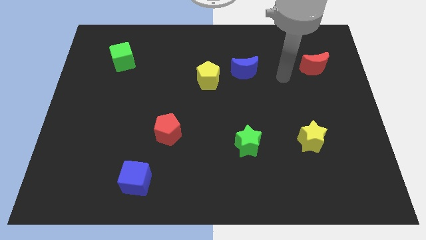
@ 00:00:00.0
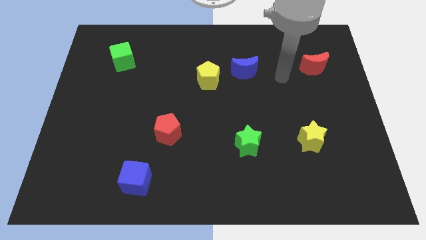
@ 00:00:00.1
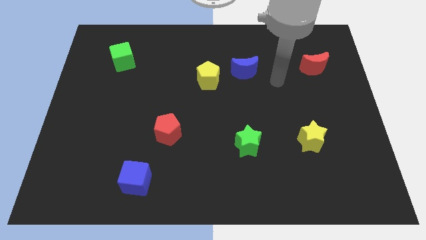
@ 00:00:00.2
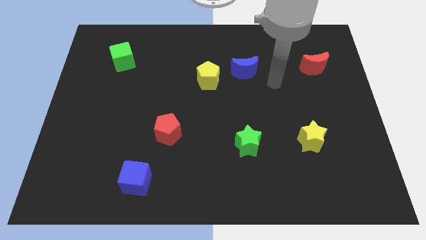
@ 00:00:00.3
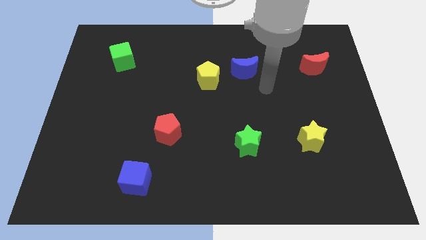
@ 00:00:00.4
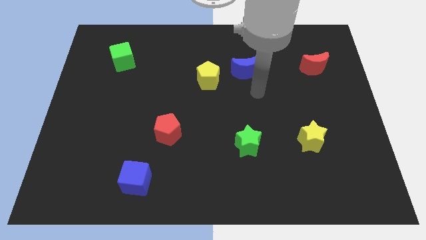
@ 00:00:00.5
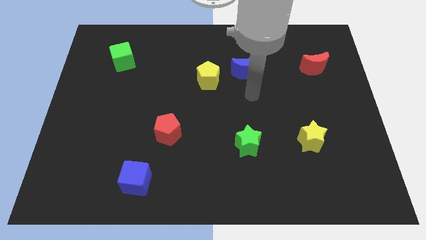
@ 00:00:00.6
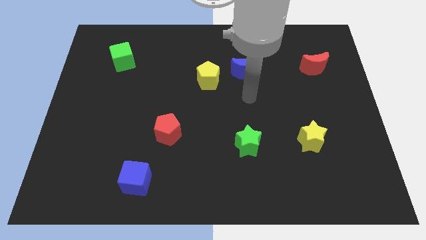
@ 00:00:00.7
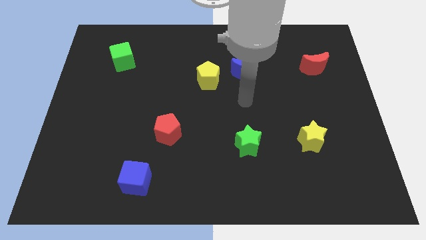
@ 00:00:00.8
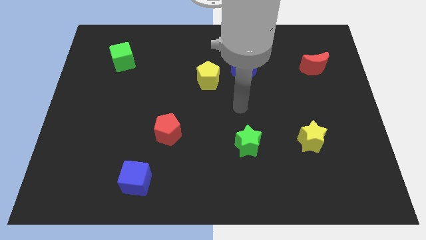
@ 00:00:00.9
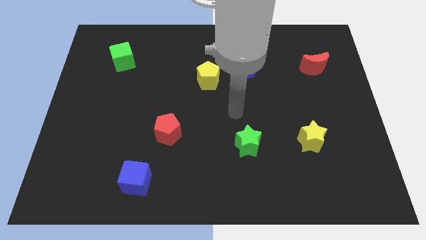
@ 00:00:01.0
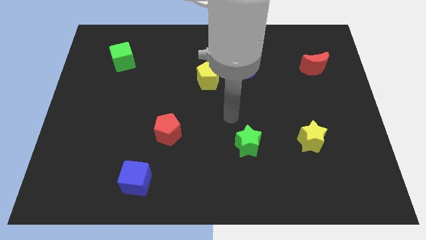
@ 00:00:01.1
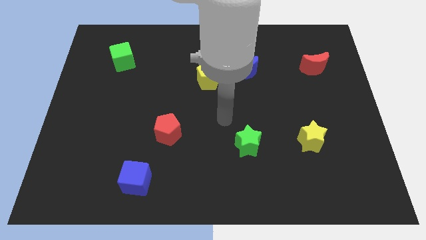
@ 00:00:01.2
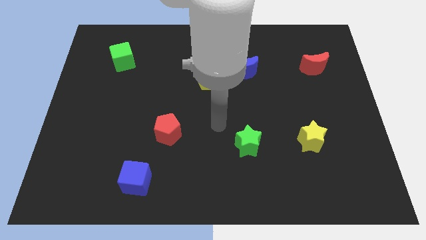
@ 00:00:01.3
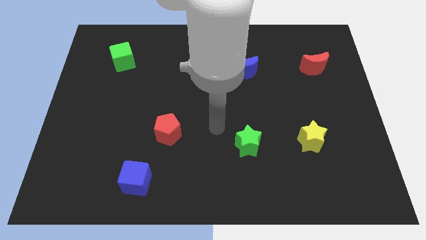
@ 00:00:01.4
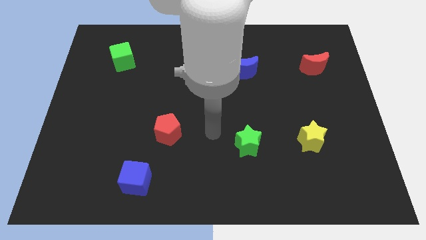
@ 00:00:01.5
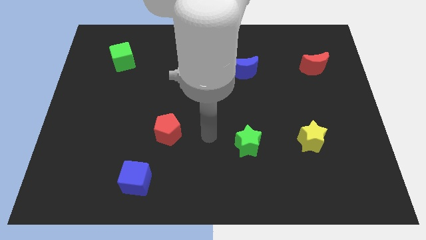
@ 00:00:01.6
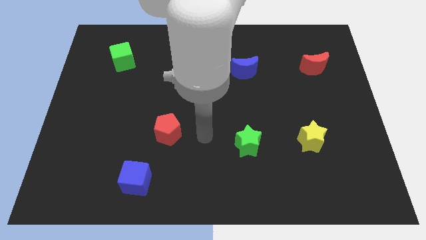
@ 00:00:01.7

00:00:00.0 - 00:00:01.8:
put your arm in between the red pentagon and green star

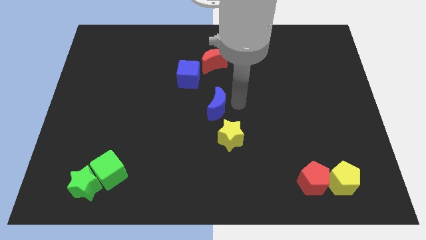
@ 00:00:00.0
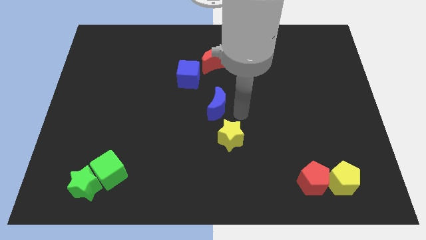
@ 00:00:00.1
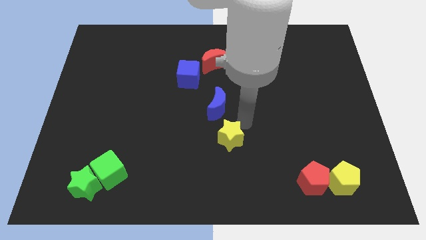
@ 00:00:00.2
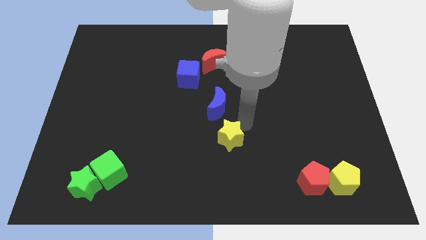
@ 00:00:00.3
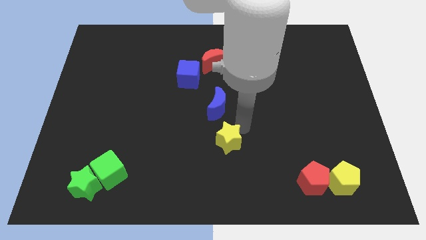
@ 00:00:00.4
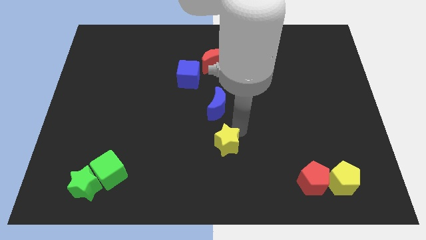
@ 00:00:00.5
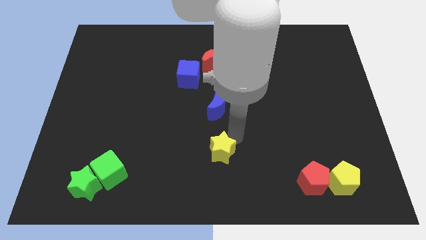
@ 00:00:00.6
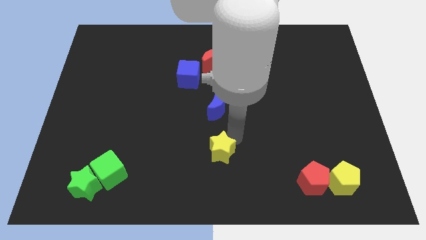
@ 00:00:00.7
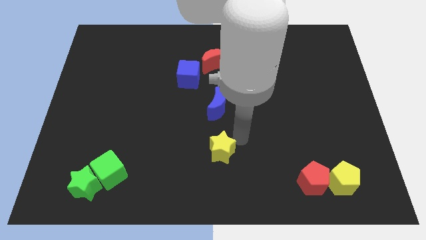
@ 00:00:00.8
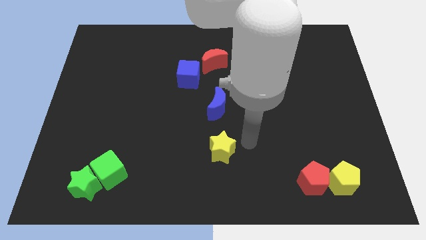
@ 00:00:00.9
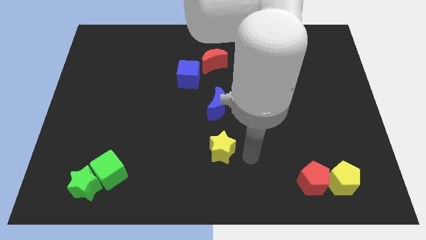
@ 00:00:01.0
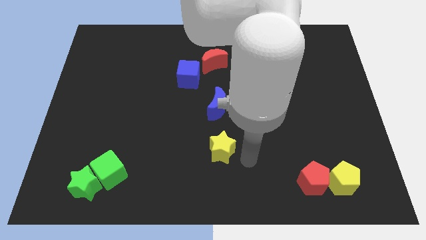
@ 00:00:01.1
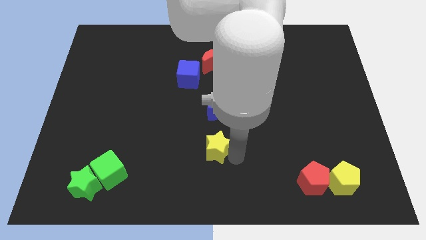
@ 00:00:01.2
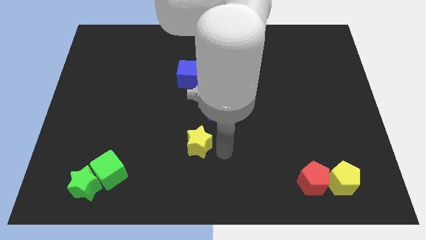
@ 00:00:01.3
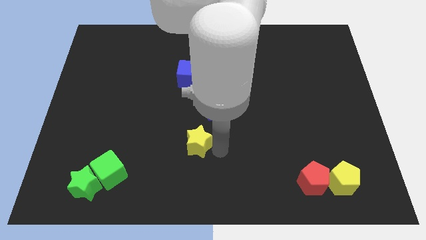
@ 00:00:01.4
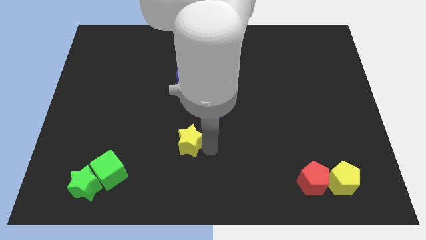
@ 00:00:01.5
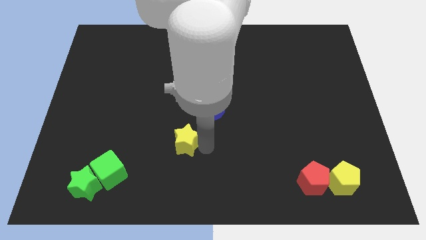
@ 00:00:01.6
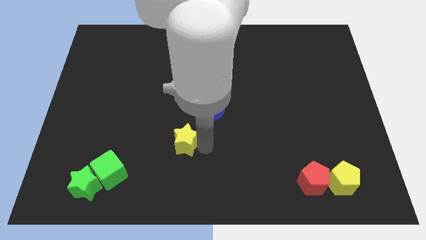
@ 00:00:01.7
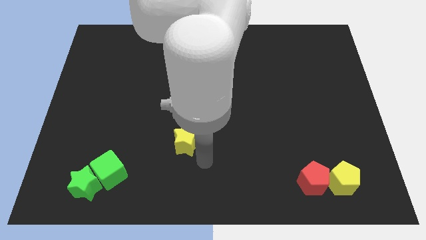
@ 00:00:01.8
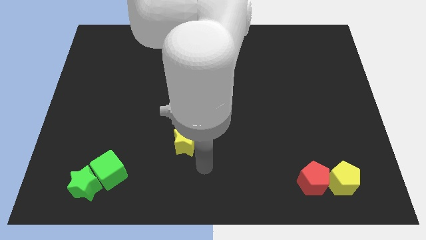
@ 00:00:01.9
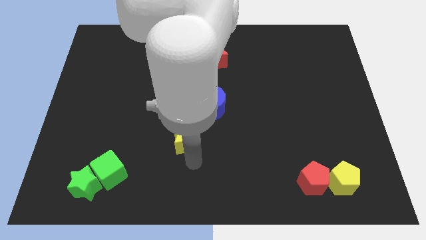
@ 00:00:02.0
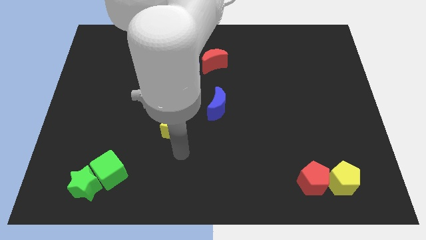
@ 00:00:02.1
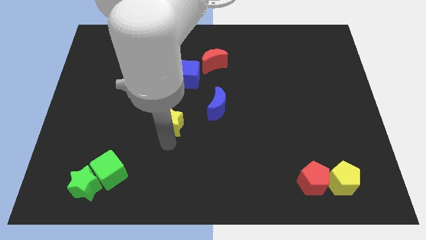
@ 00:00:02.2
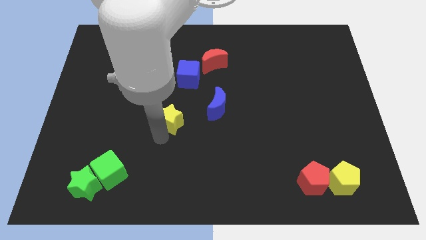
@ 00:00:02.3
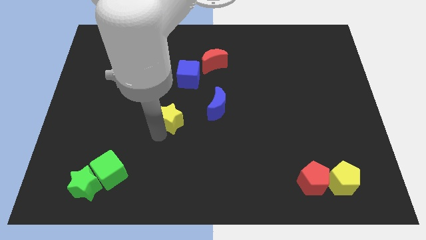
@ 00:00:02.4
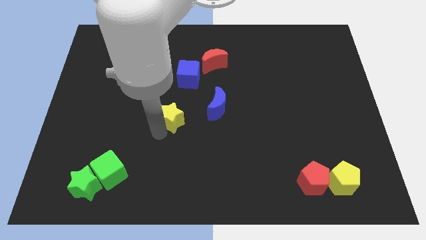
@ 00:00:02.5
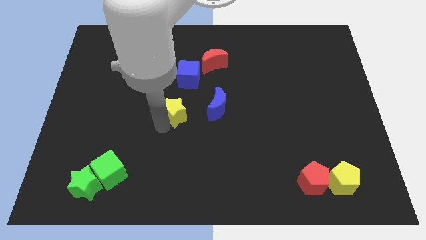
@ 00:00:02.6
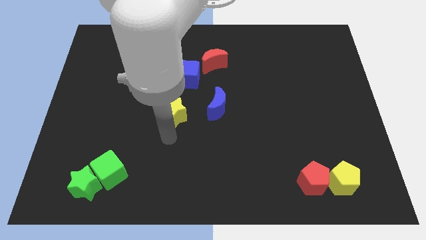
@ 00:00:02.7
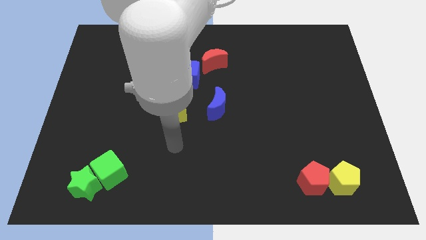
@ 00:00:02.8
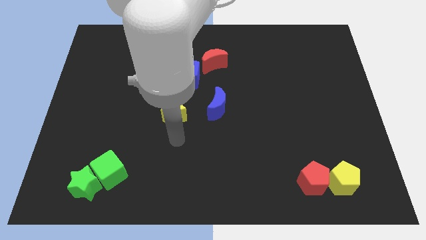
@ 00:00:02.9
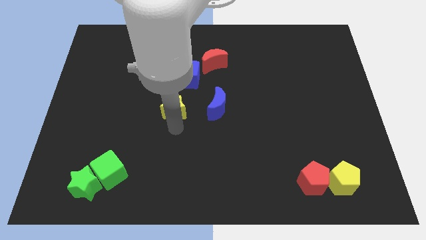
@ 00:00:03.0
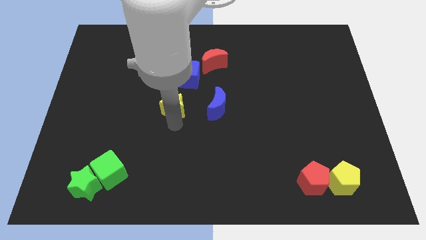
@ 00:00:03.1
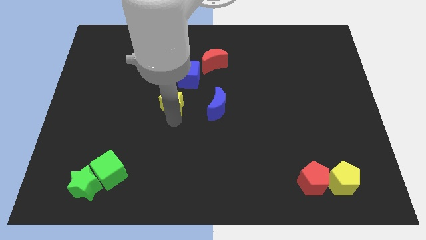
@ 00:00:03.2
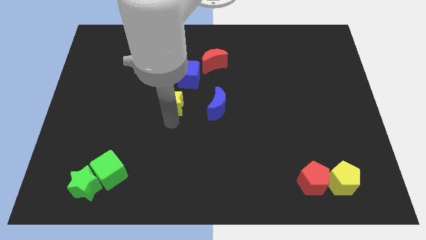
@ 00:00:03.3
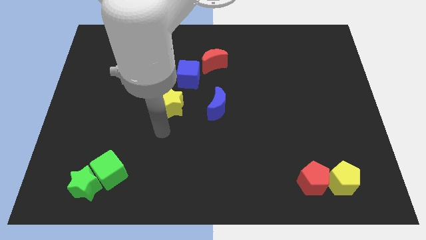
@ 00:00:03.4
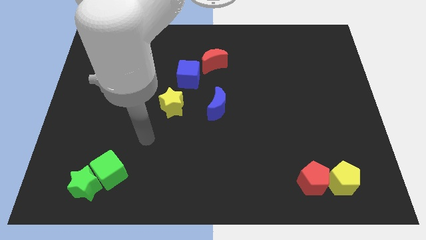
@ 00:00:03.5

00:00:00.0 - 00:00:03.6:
slide the yellow star to the left side of the blue crescent

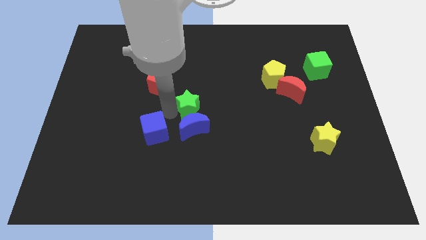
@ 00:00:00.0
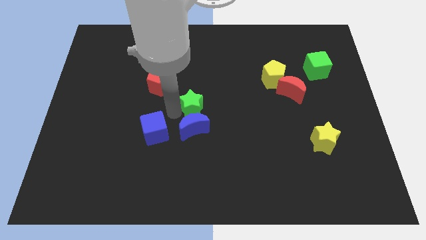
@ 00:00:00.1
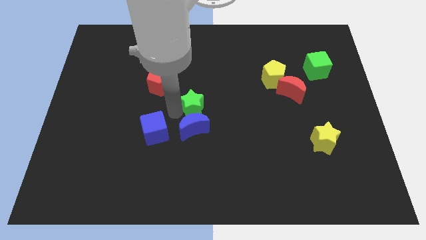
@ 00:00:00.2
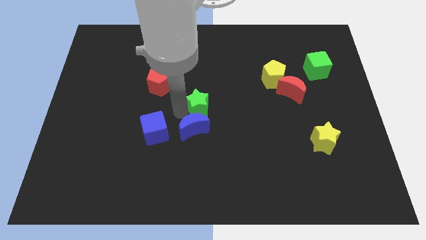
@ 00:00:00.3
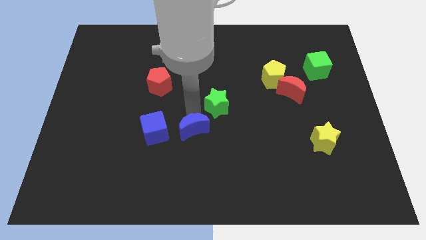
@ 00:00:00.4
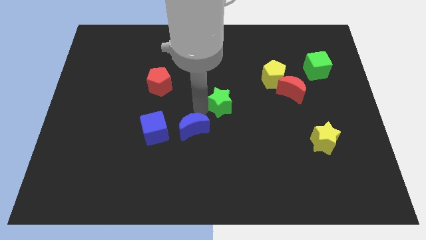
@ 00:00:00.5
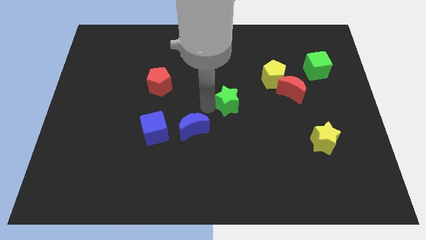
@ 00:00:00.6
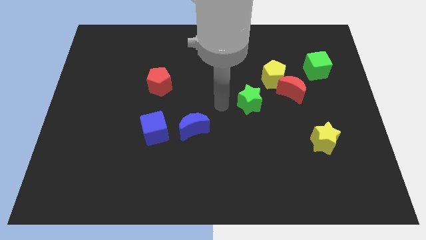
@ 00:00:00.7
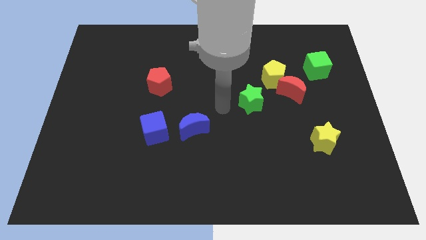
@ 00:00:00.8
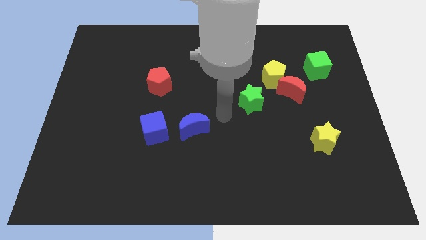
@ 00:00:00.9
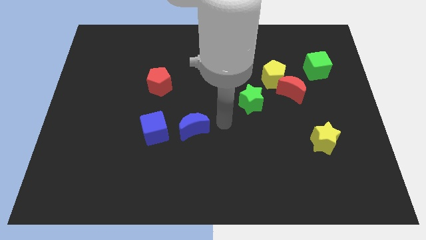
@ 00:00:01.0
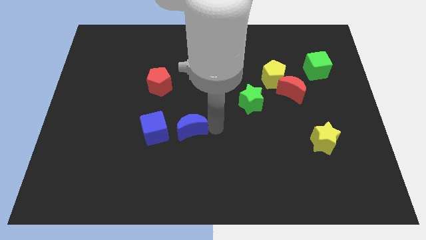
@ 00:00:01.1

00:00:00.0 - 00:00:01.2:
move the green star close to the yellow pentagon

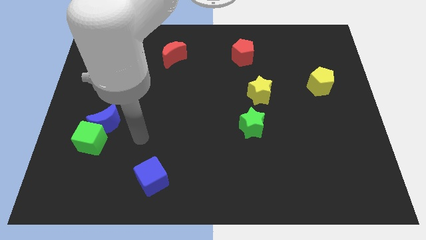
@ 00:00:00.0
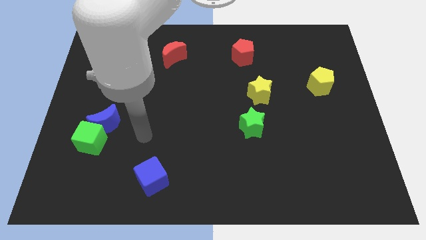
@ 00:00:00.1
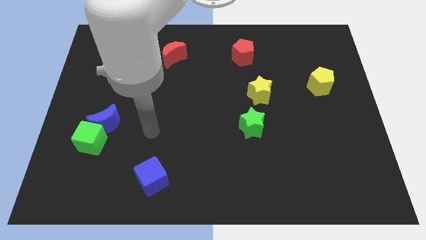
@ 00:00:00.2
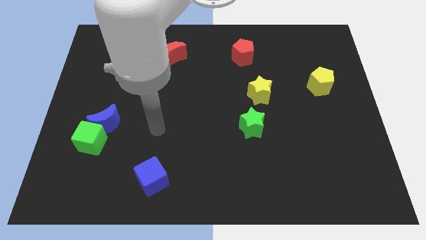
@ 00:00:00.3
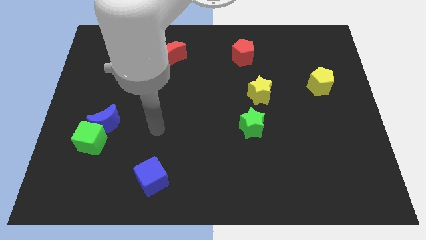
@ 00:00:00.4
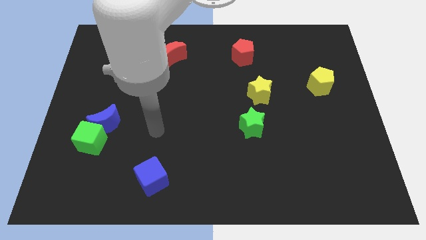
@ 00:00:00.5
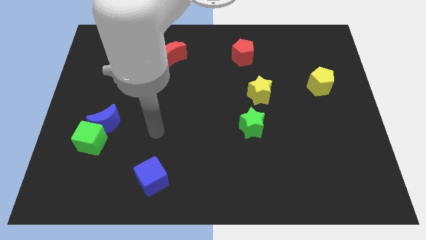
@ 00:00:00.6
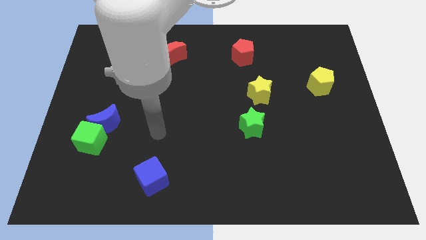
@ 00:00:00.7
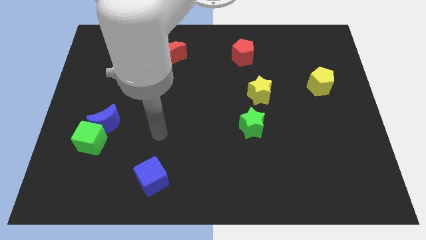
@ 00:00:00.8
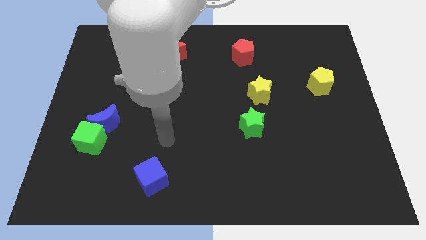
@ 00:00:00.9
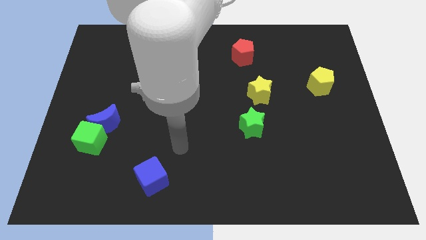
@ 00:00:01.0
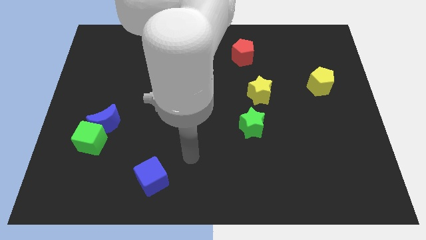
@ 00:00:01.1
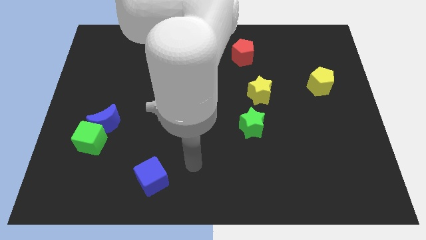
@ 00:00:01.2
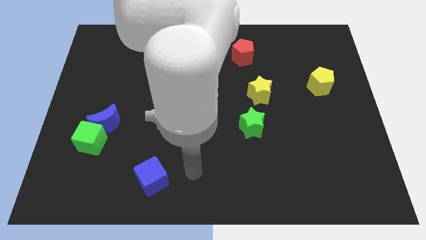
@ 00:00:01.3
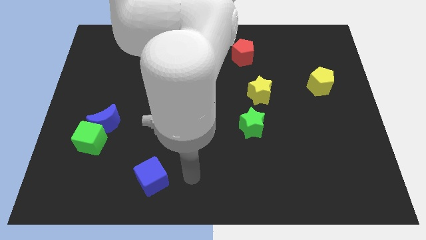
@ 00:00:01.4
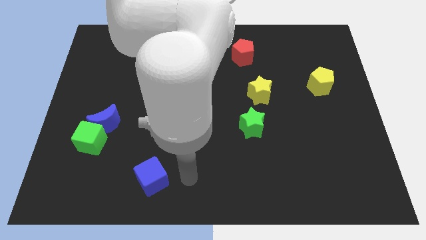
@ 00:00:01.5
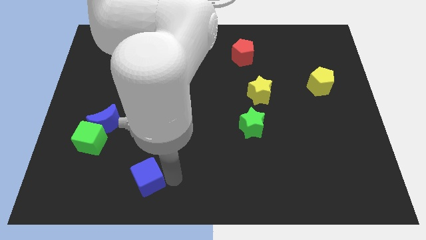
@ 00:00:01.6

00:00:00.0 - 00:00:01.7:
place your arm to the right side of blue cube

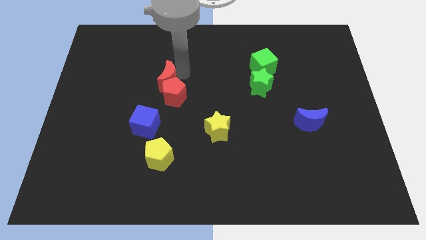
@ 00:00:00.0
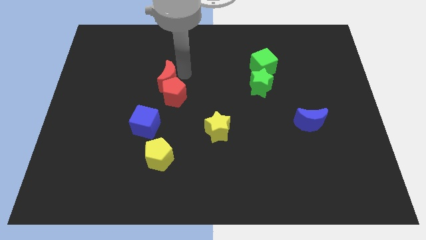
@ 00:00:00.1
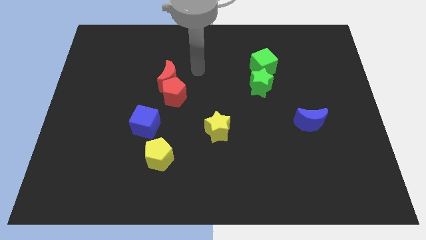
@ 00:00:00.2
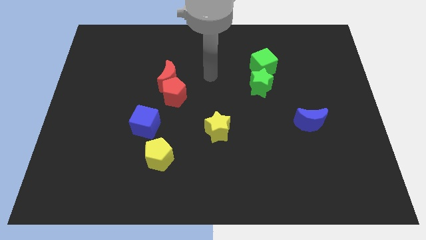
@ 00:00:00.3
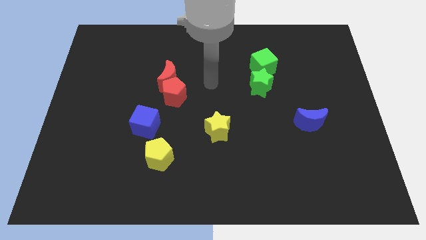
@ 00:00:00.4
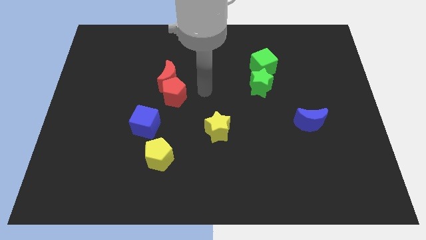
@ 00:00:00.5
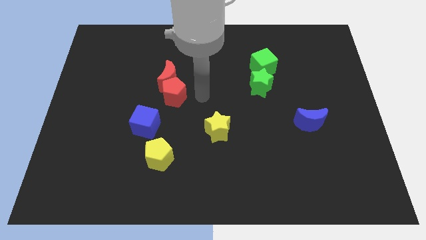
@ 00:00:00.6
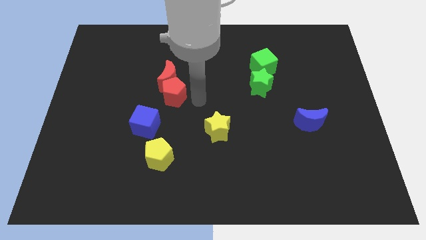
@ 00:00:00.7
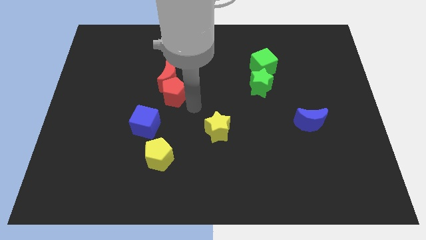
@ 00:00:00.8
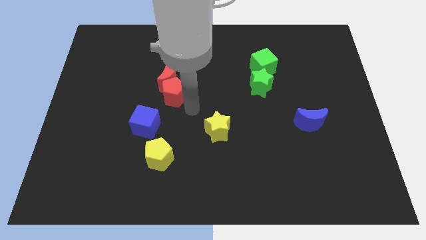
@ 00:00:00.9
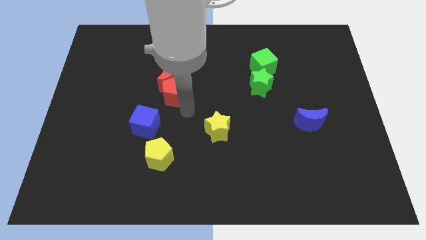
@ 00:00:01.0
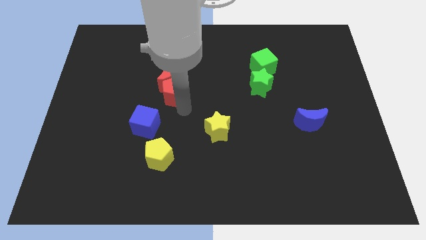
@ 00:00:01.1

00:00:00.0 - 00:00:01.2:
move the arm towards the red pentagon
